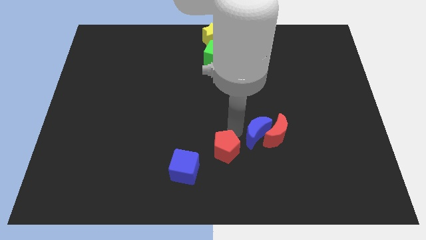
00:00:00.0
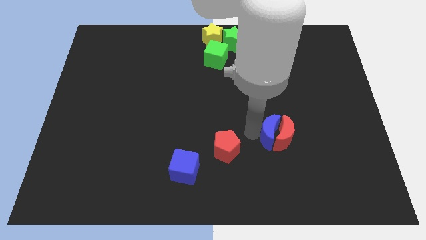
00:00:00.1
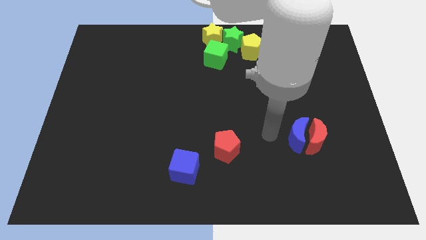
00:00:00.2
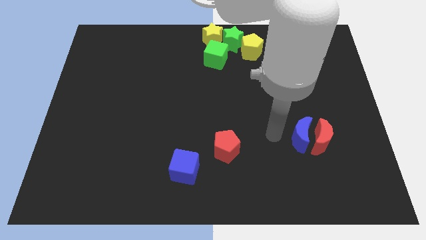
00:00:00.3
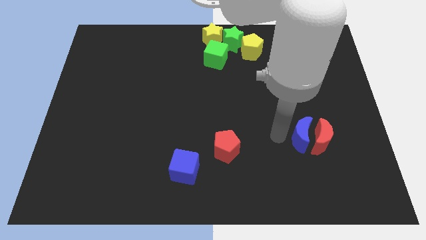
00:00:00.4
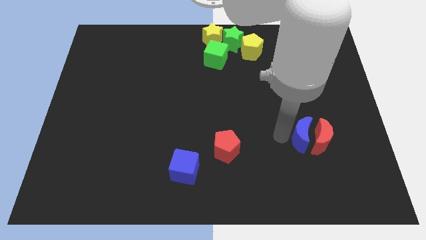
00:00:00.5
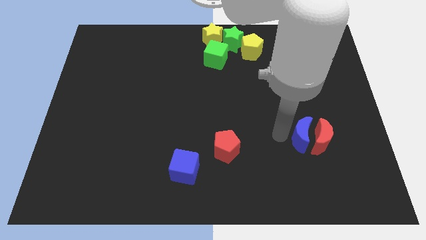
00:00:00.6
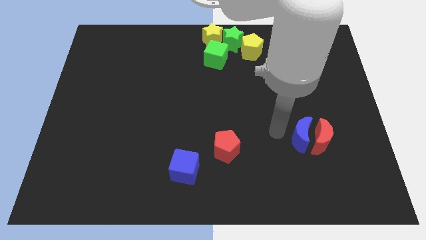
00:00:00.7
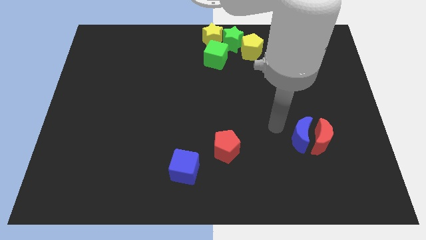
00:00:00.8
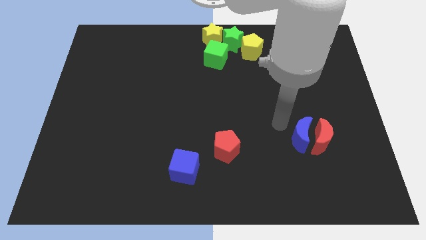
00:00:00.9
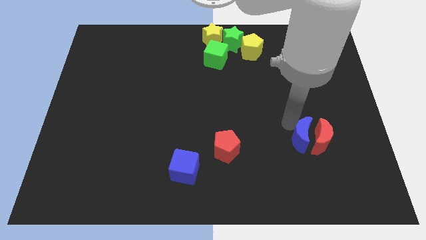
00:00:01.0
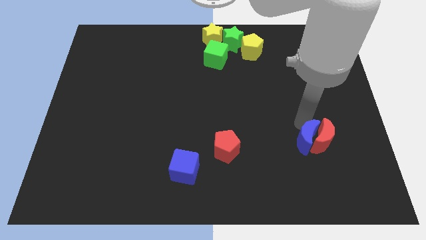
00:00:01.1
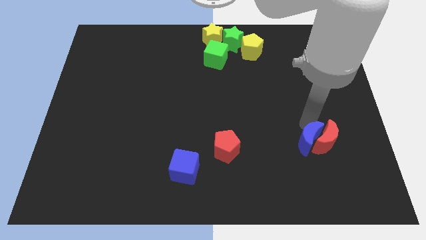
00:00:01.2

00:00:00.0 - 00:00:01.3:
push the blue crescent along with the red crescent to the right

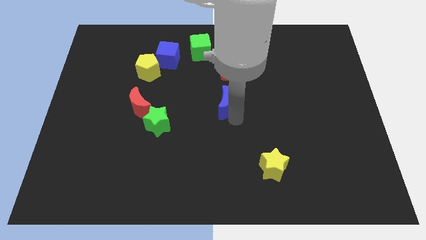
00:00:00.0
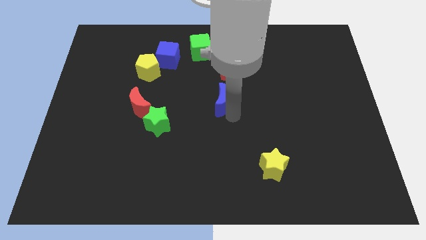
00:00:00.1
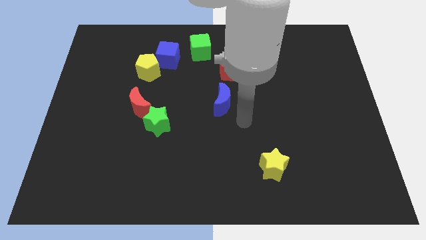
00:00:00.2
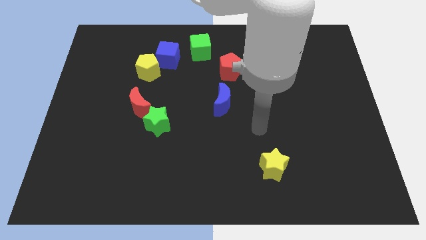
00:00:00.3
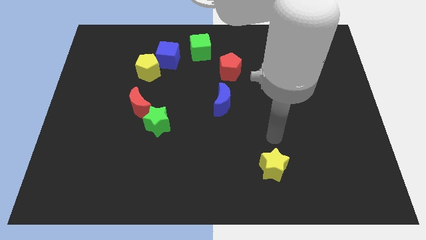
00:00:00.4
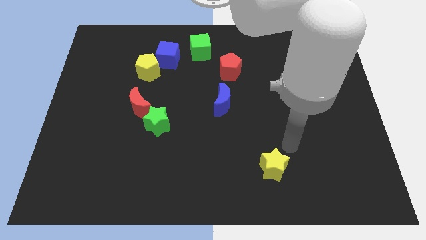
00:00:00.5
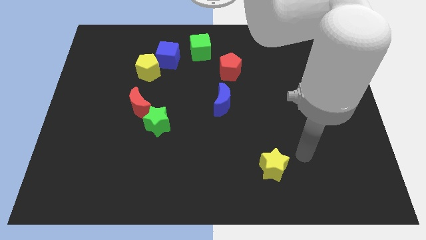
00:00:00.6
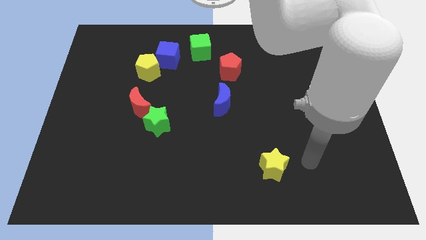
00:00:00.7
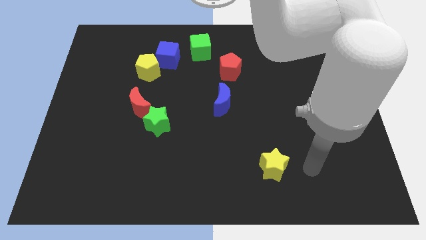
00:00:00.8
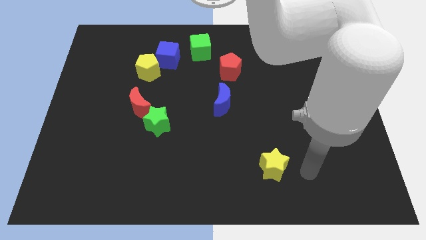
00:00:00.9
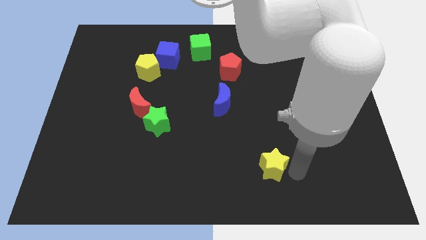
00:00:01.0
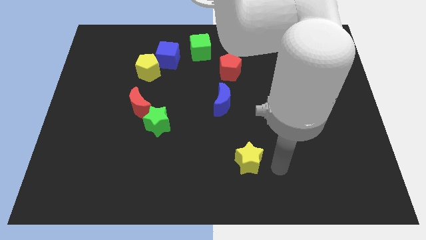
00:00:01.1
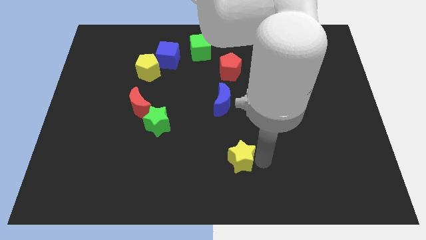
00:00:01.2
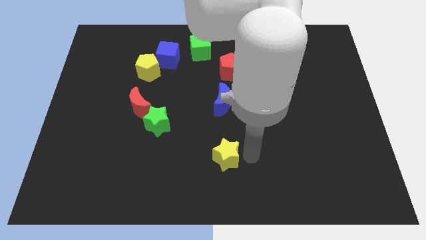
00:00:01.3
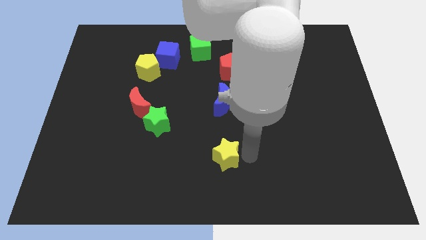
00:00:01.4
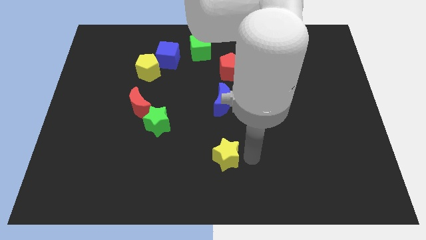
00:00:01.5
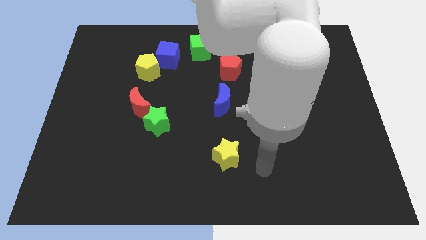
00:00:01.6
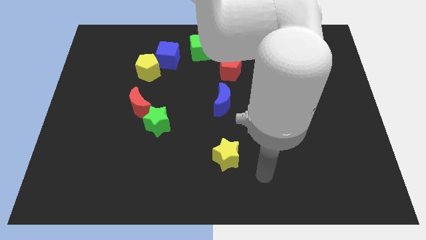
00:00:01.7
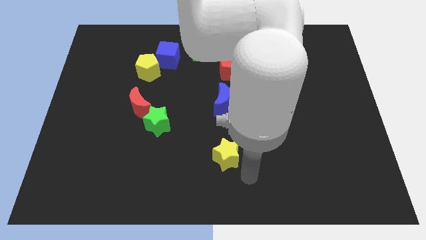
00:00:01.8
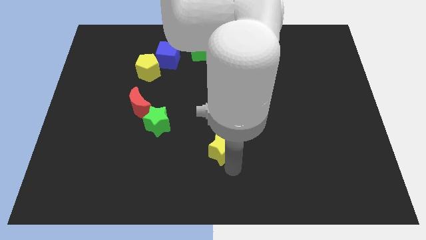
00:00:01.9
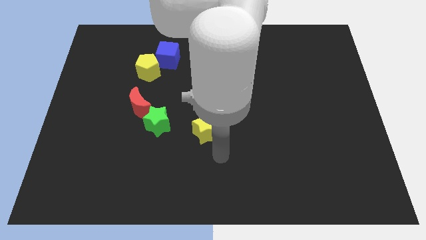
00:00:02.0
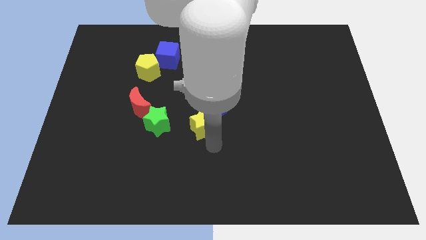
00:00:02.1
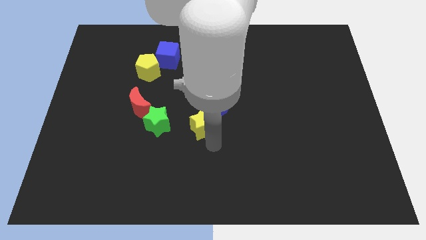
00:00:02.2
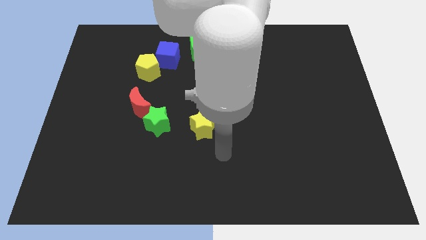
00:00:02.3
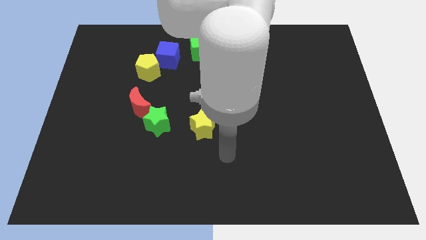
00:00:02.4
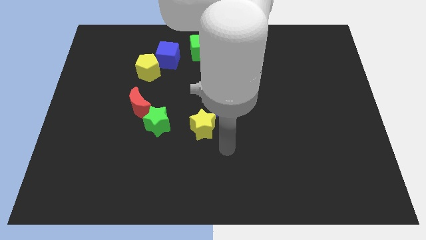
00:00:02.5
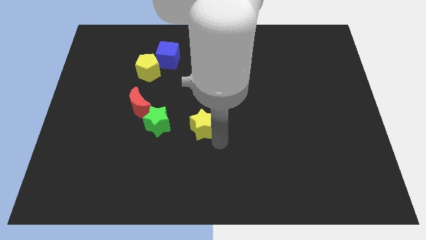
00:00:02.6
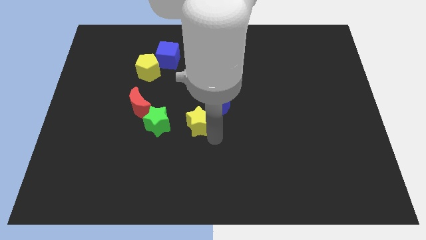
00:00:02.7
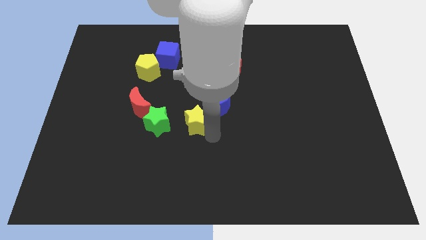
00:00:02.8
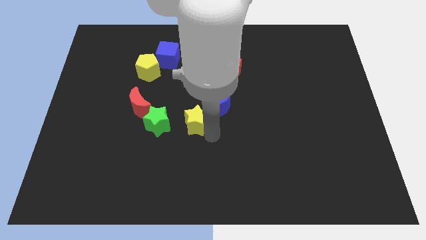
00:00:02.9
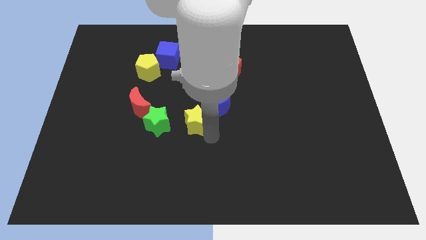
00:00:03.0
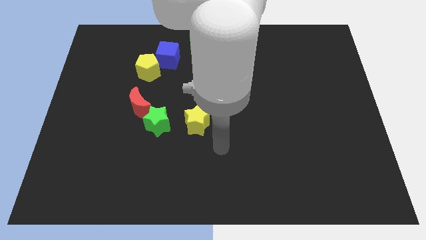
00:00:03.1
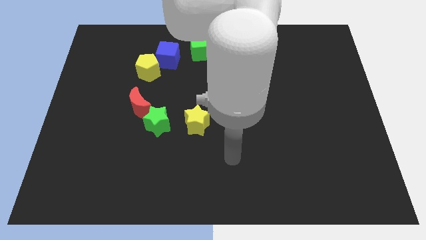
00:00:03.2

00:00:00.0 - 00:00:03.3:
place the yellow star in between the green star and blue crescent

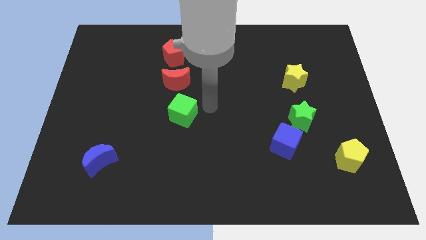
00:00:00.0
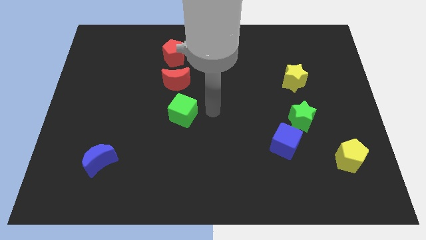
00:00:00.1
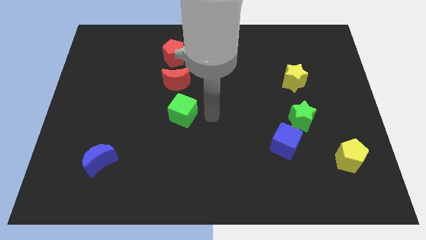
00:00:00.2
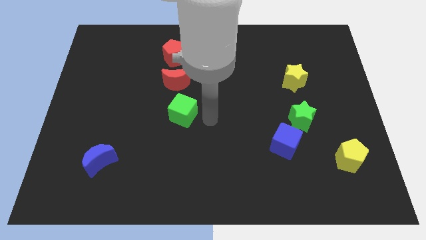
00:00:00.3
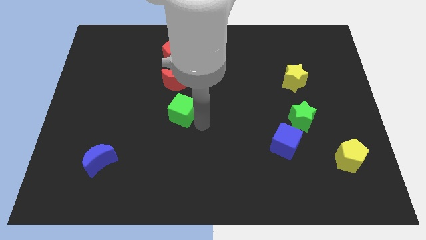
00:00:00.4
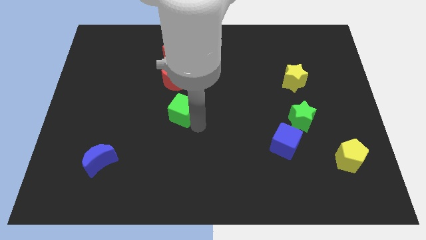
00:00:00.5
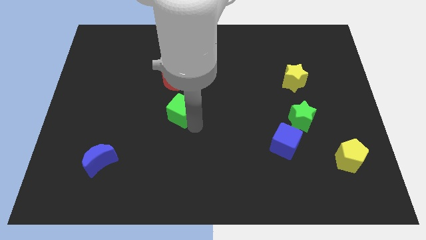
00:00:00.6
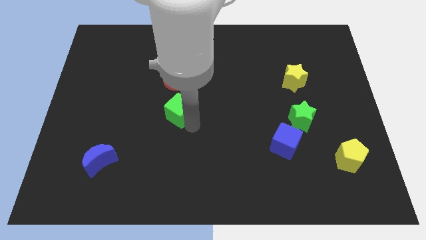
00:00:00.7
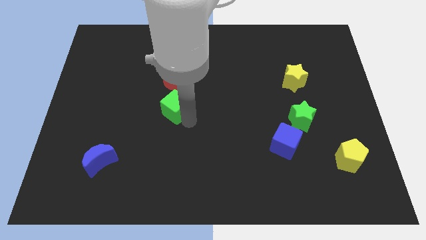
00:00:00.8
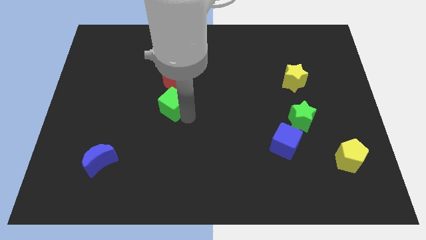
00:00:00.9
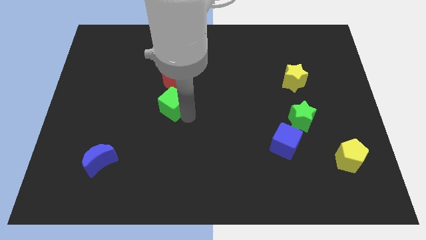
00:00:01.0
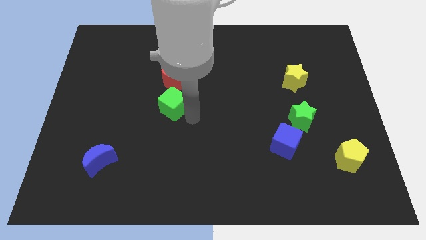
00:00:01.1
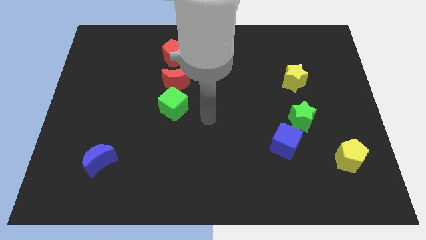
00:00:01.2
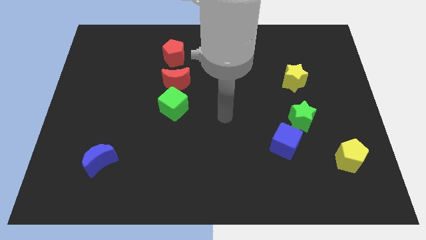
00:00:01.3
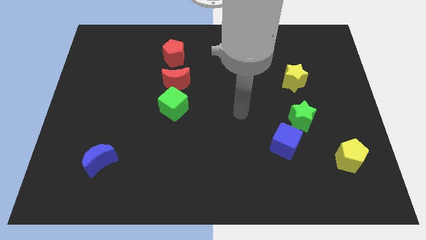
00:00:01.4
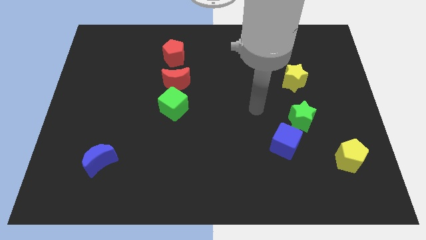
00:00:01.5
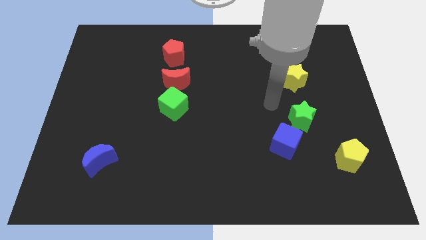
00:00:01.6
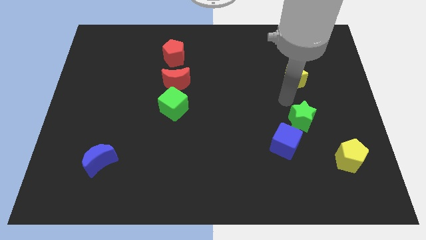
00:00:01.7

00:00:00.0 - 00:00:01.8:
place green cube down to the red crescent

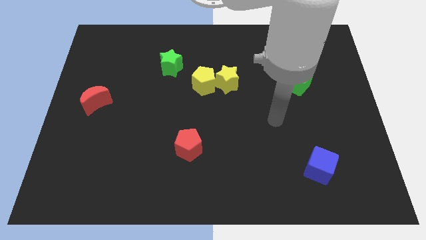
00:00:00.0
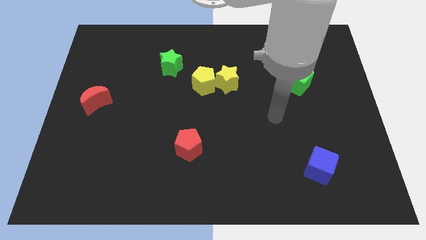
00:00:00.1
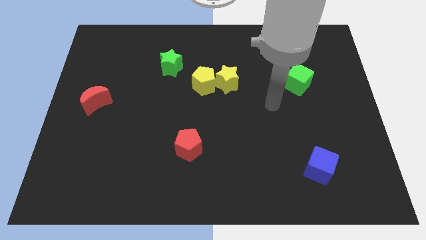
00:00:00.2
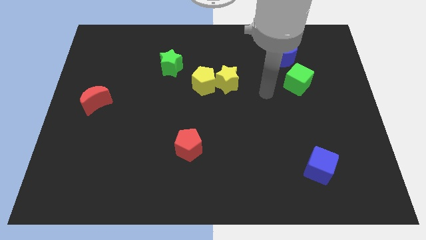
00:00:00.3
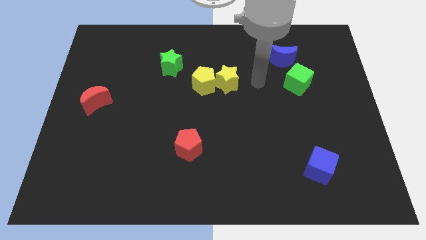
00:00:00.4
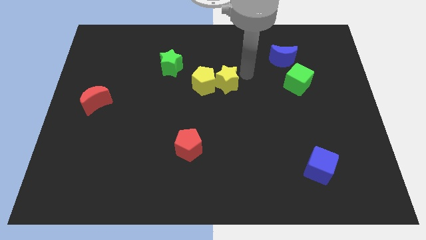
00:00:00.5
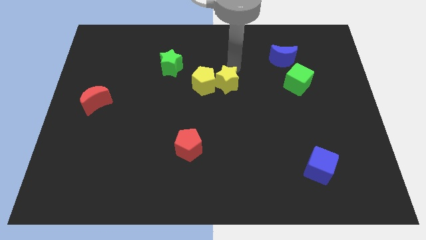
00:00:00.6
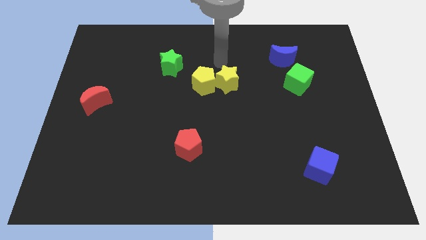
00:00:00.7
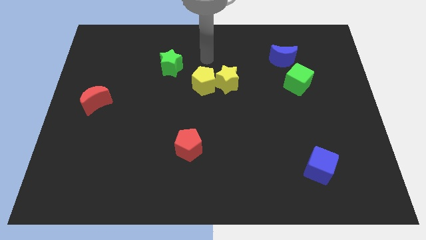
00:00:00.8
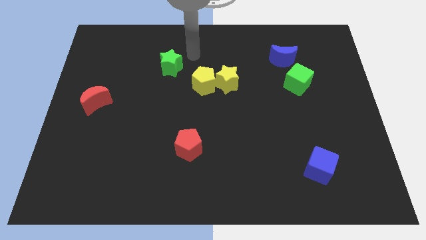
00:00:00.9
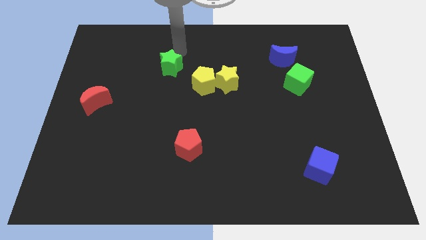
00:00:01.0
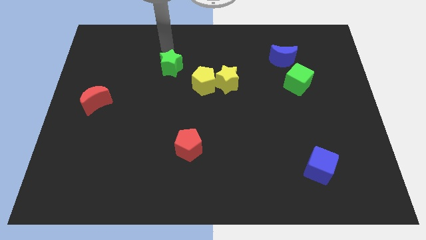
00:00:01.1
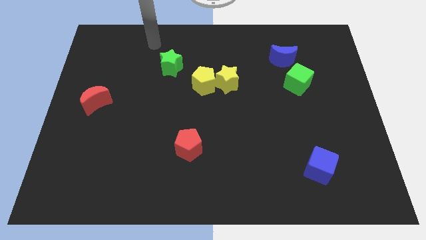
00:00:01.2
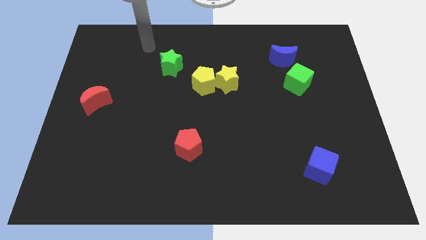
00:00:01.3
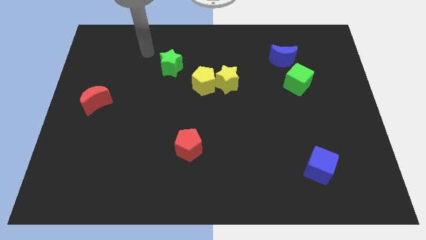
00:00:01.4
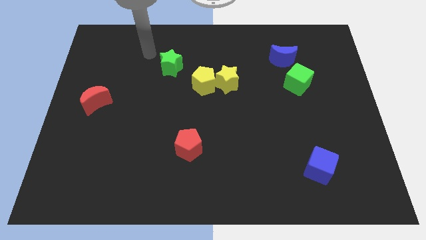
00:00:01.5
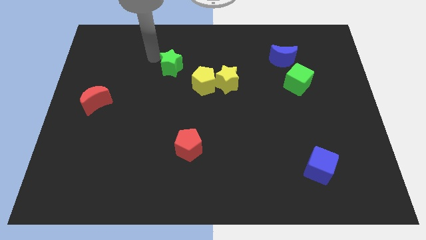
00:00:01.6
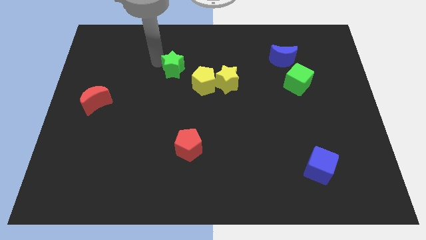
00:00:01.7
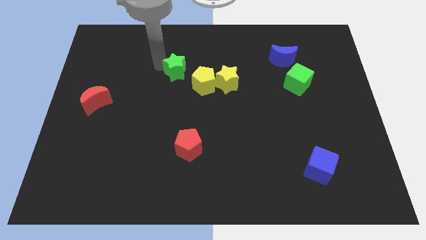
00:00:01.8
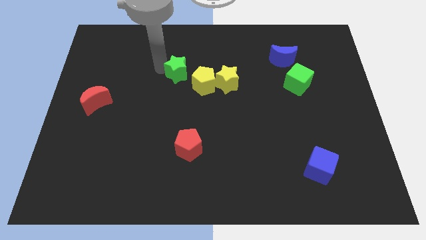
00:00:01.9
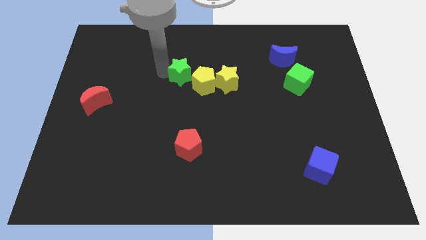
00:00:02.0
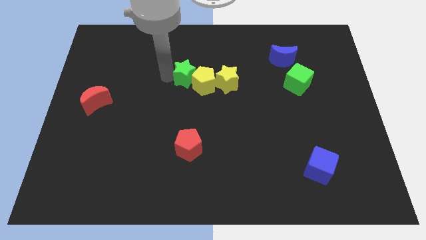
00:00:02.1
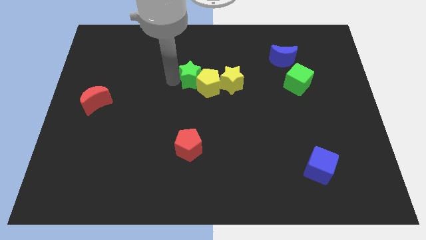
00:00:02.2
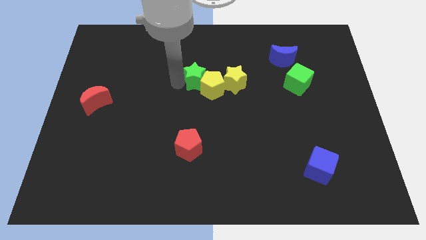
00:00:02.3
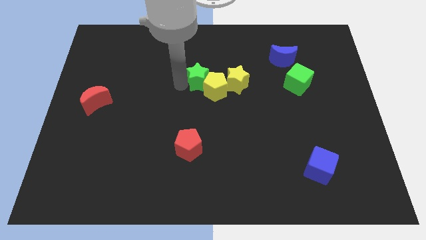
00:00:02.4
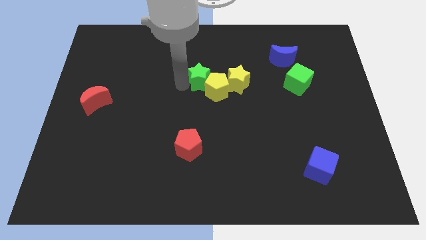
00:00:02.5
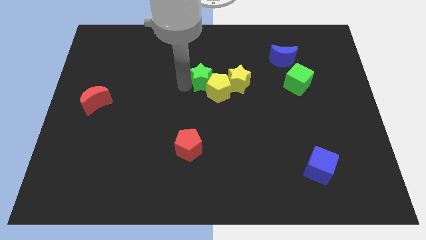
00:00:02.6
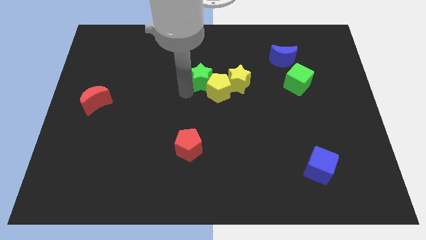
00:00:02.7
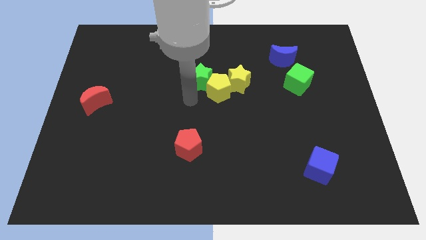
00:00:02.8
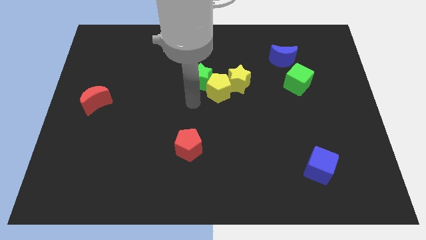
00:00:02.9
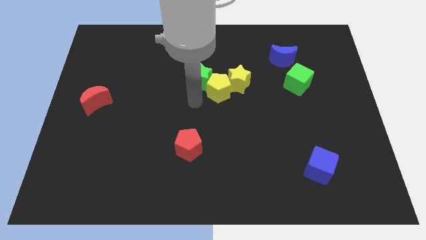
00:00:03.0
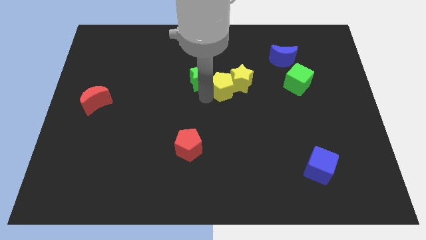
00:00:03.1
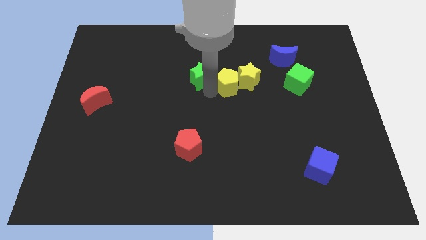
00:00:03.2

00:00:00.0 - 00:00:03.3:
push the green star into the yellow pentagon
